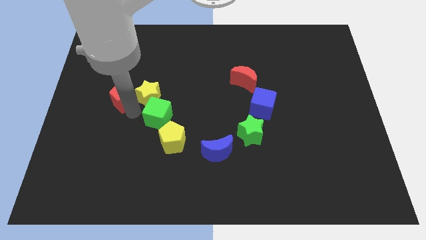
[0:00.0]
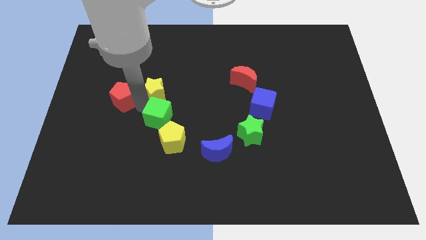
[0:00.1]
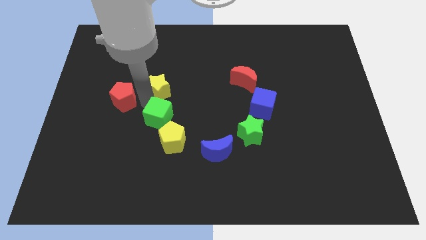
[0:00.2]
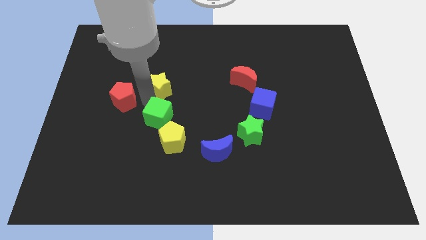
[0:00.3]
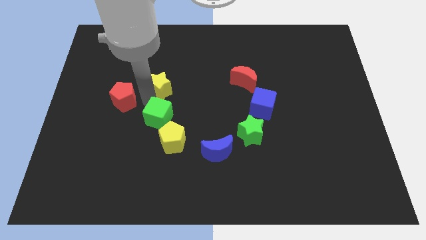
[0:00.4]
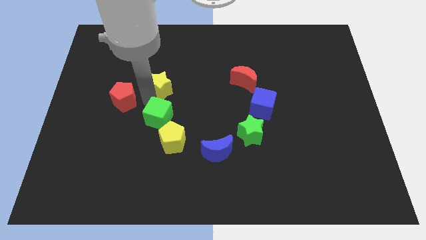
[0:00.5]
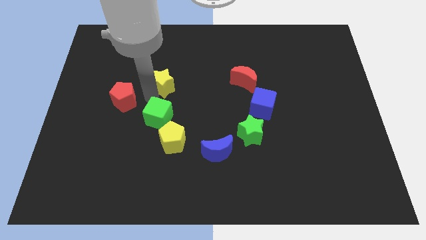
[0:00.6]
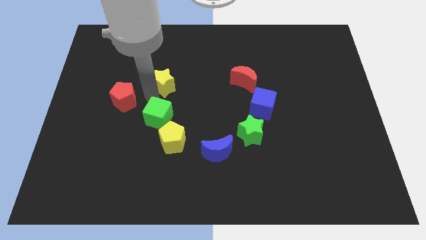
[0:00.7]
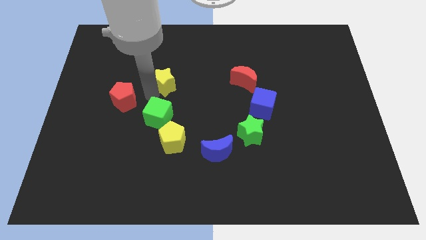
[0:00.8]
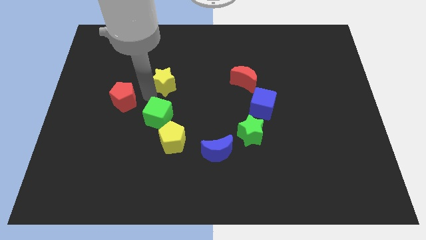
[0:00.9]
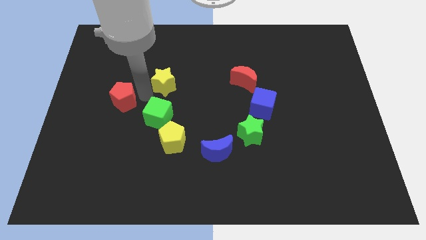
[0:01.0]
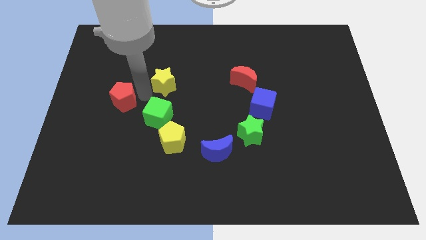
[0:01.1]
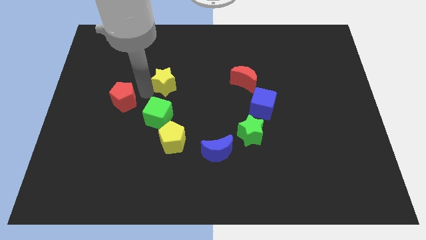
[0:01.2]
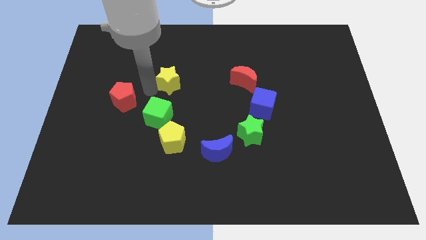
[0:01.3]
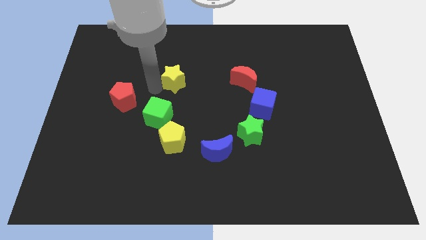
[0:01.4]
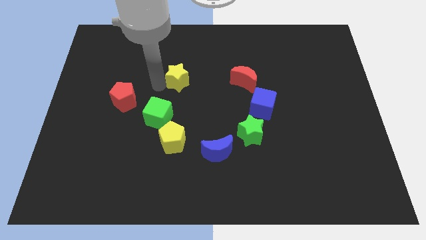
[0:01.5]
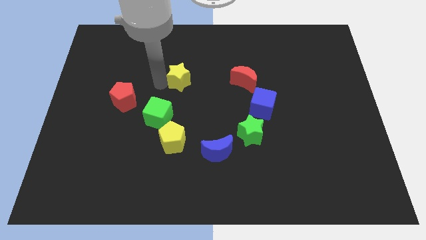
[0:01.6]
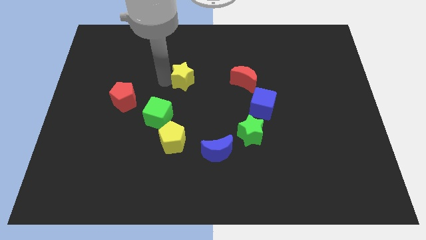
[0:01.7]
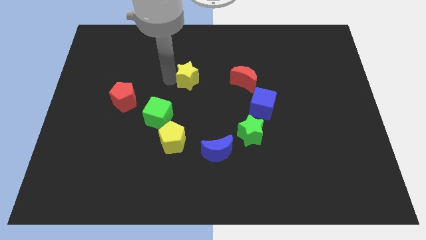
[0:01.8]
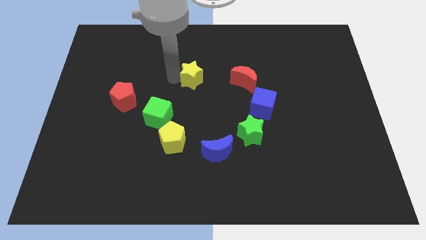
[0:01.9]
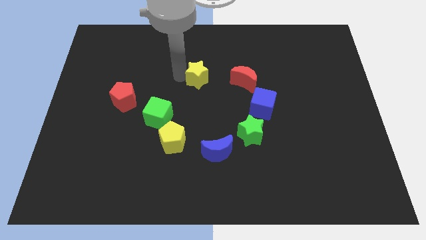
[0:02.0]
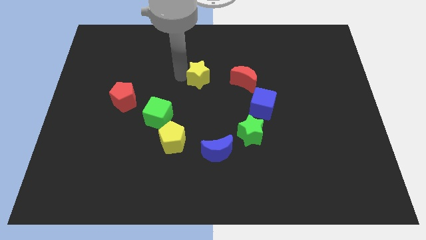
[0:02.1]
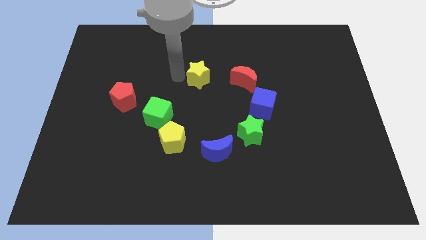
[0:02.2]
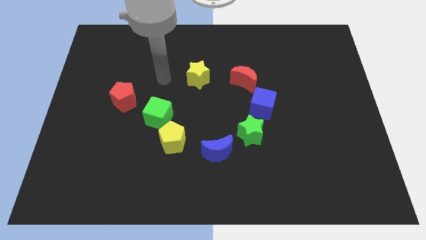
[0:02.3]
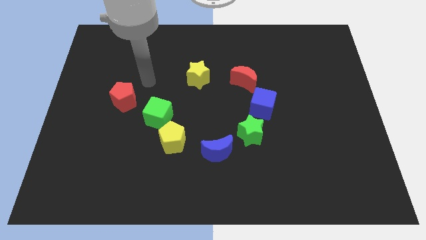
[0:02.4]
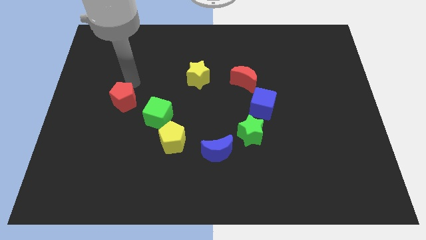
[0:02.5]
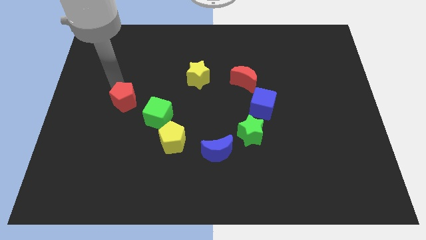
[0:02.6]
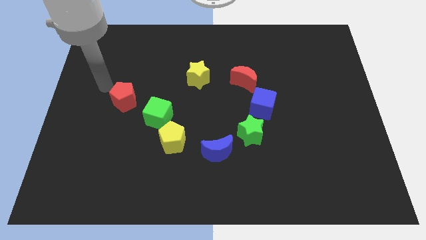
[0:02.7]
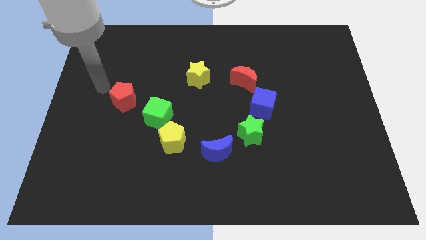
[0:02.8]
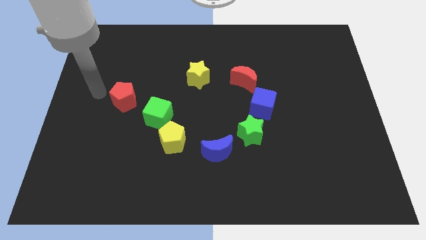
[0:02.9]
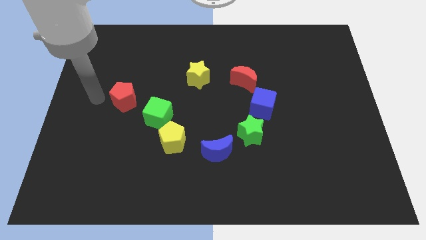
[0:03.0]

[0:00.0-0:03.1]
separate the yellow star from red pentagon

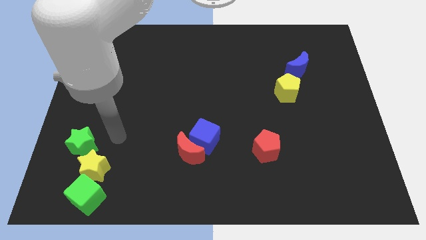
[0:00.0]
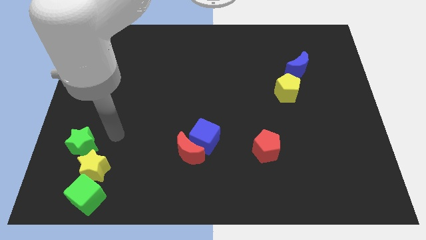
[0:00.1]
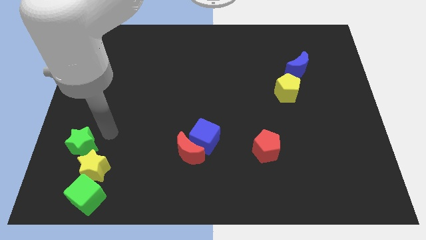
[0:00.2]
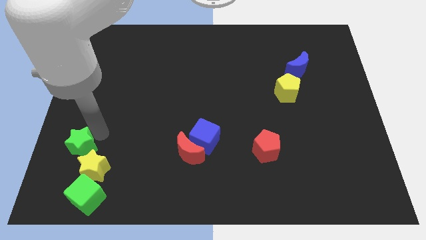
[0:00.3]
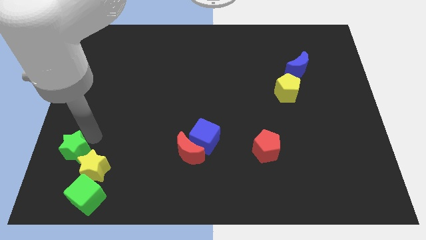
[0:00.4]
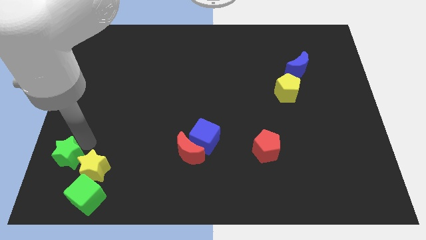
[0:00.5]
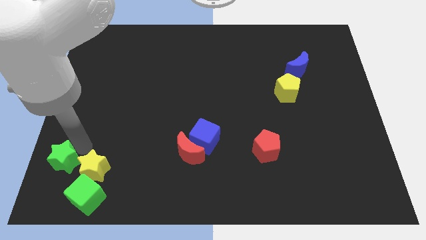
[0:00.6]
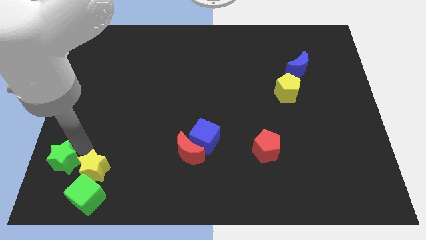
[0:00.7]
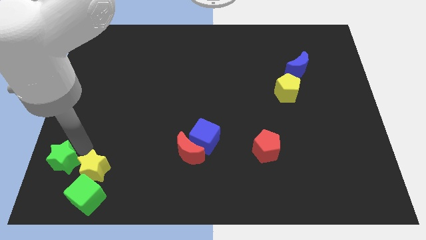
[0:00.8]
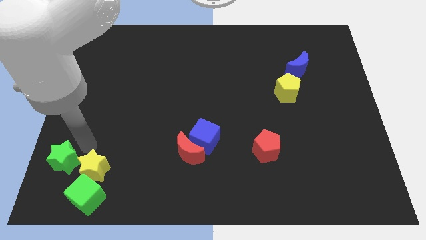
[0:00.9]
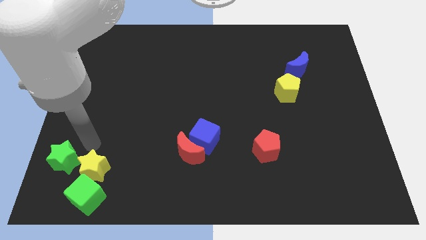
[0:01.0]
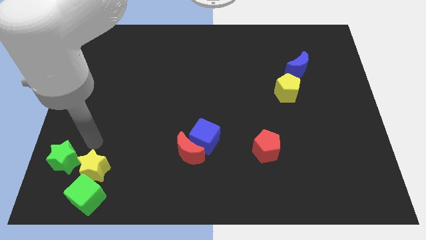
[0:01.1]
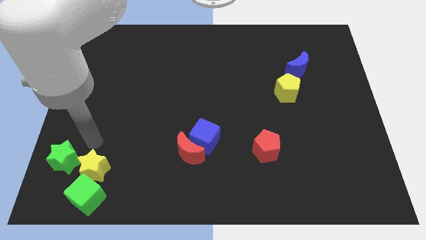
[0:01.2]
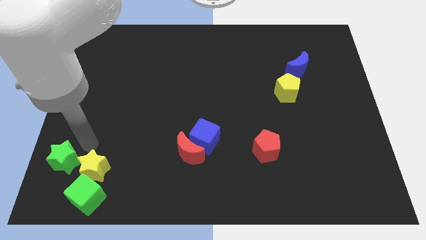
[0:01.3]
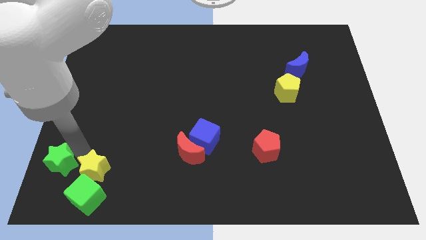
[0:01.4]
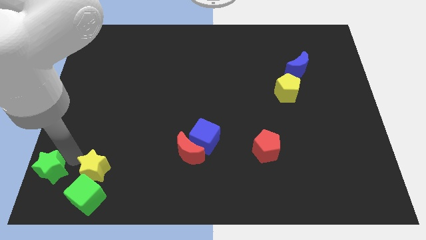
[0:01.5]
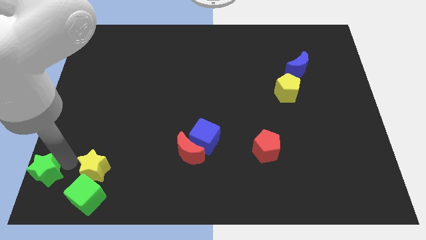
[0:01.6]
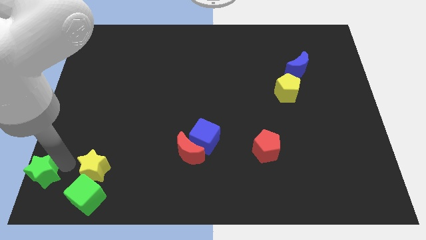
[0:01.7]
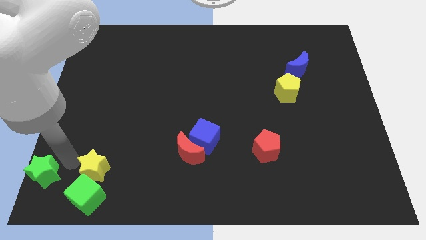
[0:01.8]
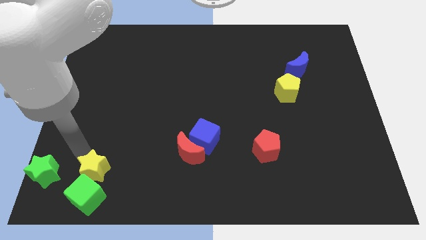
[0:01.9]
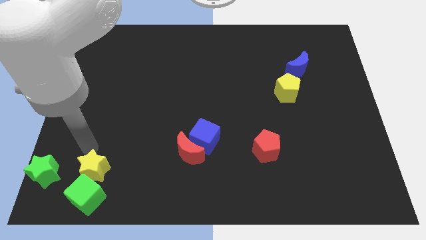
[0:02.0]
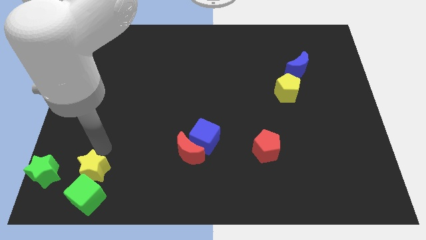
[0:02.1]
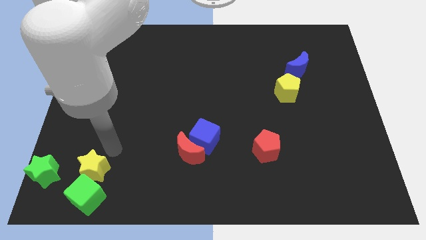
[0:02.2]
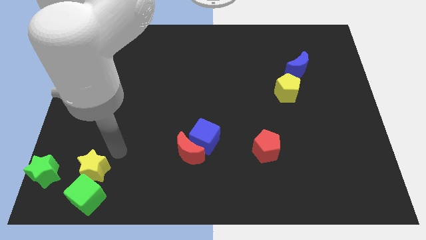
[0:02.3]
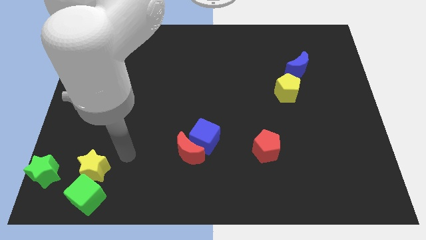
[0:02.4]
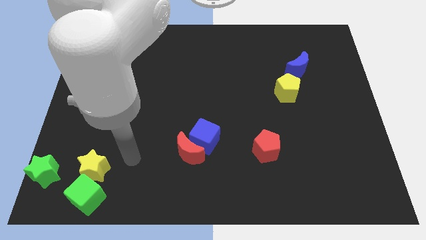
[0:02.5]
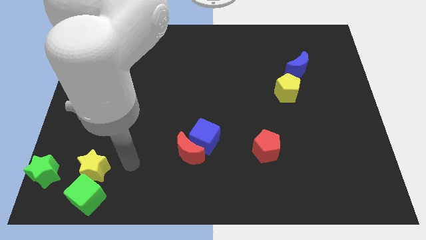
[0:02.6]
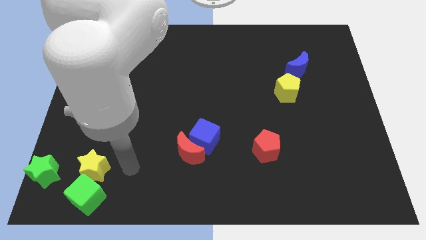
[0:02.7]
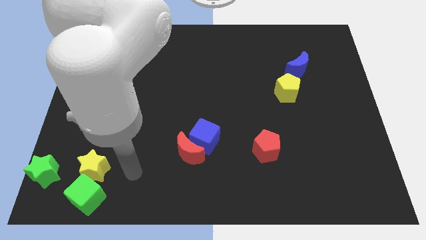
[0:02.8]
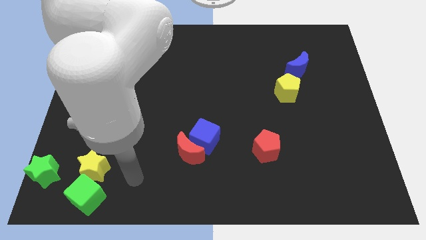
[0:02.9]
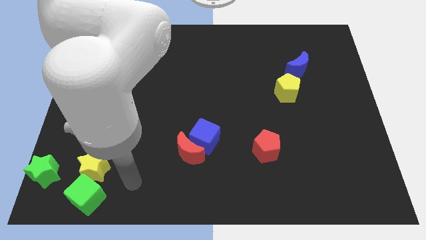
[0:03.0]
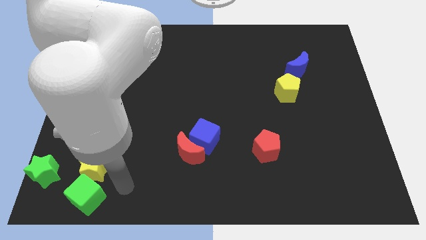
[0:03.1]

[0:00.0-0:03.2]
move the green star towards the left of the board

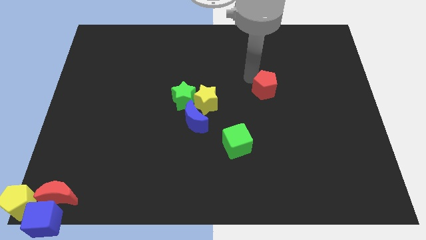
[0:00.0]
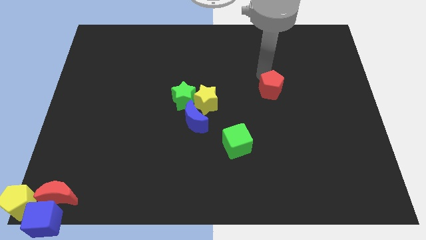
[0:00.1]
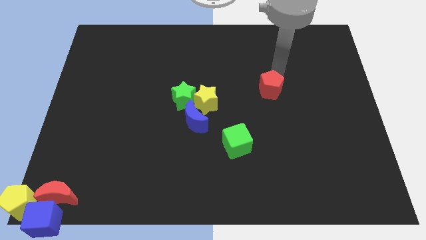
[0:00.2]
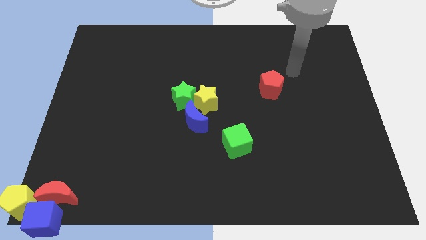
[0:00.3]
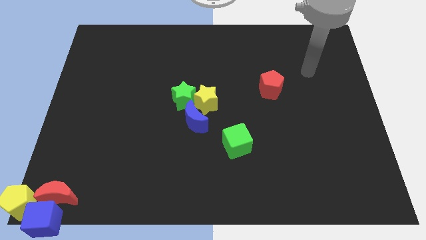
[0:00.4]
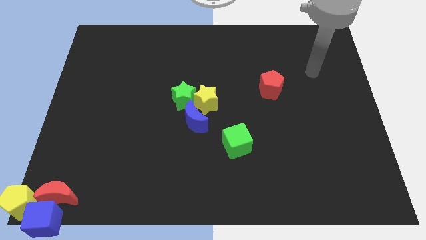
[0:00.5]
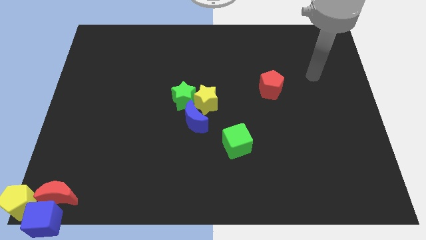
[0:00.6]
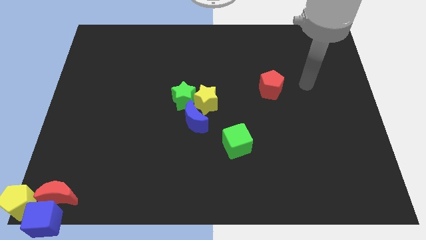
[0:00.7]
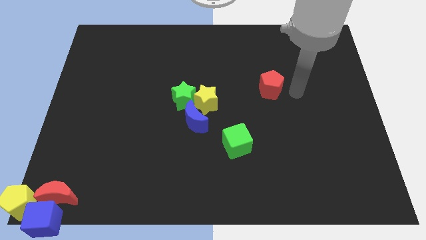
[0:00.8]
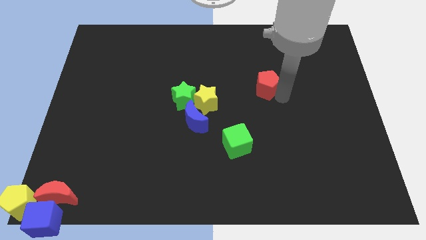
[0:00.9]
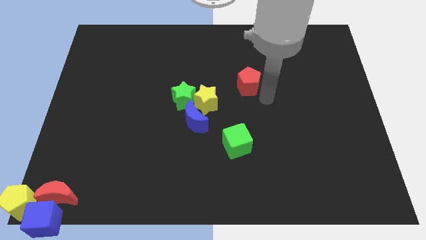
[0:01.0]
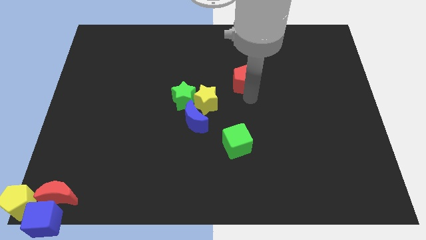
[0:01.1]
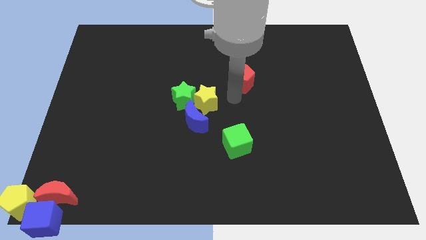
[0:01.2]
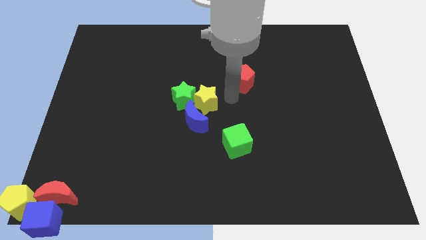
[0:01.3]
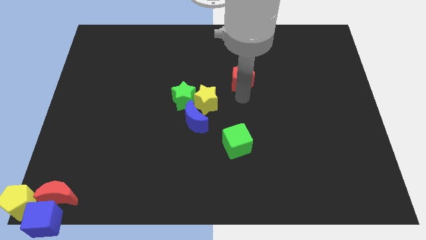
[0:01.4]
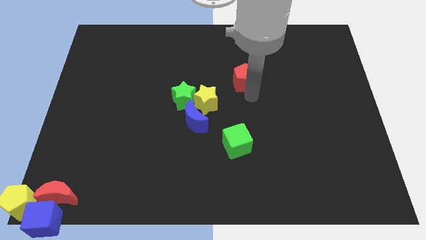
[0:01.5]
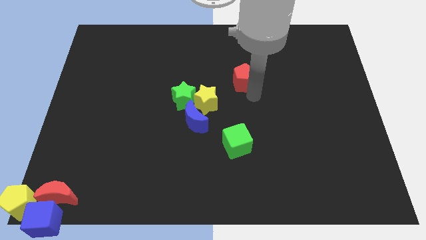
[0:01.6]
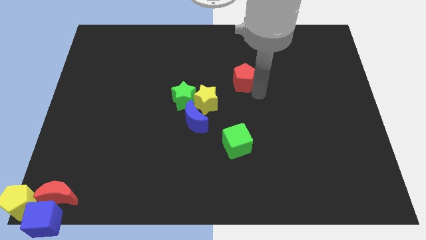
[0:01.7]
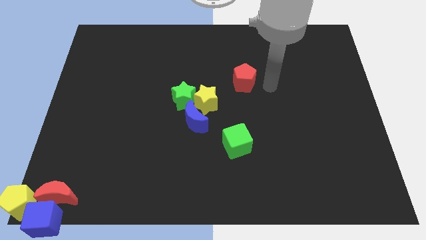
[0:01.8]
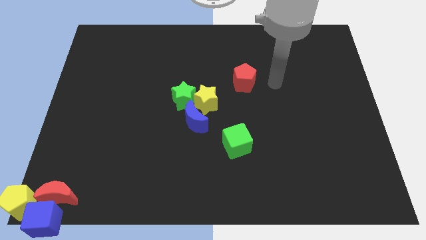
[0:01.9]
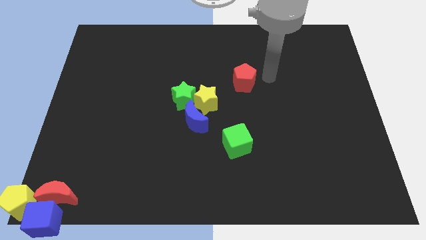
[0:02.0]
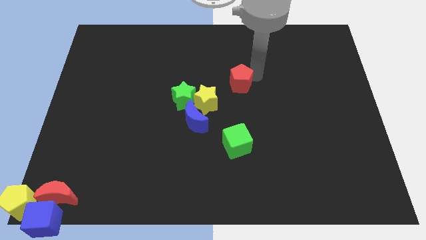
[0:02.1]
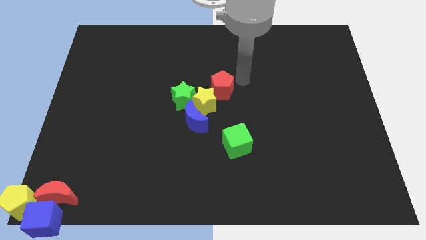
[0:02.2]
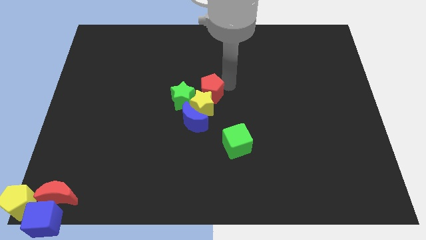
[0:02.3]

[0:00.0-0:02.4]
place the red pentagon above the yellow star

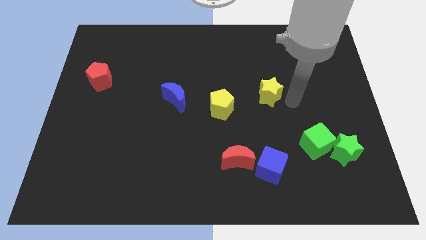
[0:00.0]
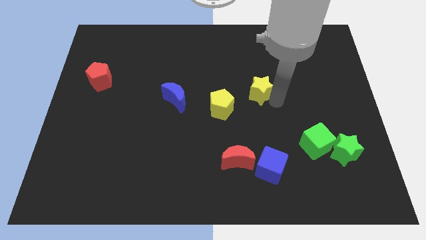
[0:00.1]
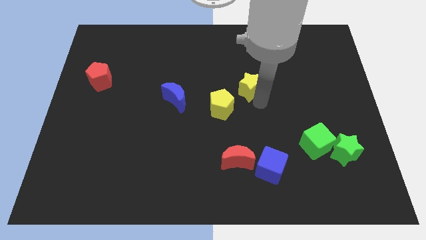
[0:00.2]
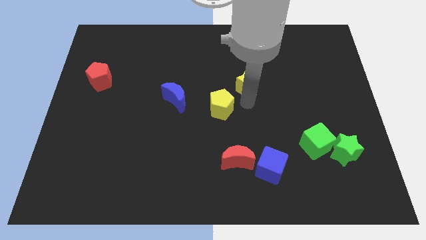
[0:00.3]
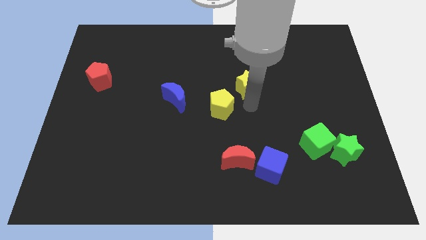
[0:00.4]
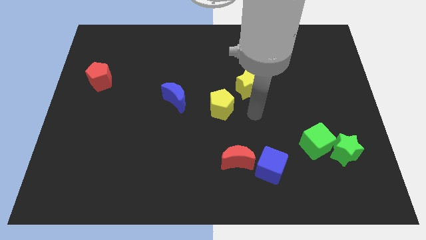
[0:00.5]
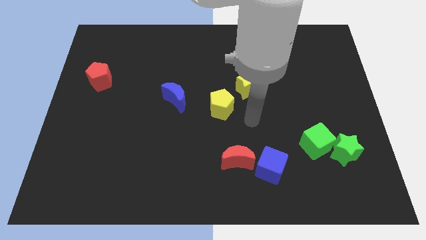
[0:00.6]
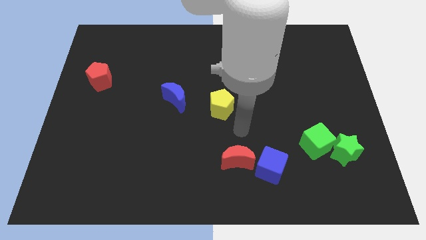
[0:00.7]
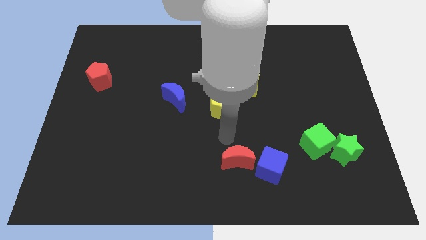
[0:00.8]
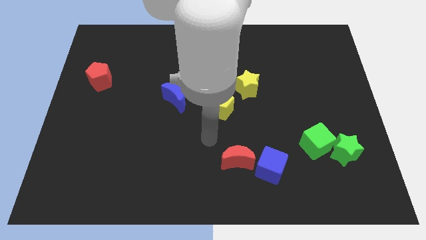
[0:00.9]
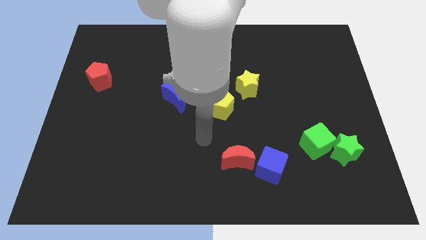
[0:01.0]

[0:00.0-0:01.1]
push the yellow star diagonally top right to the yellow pentagon
